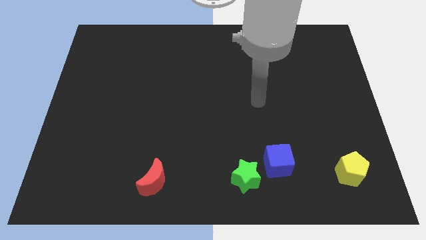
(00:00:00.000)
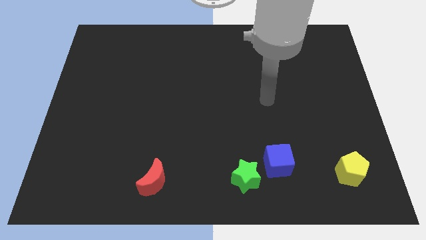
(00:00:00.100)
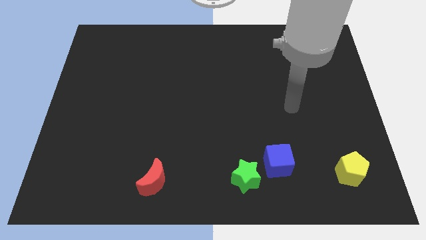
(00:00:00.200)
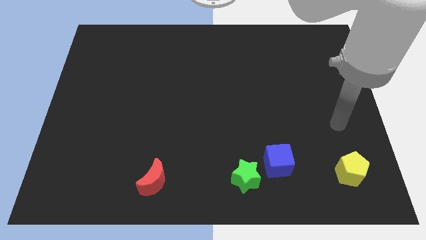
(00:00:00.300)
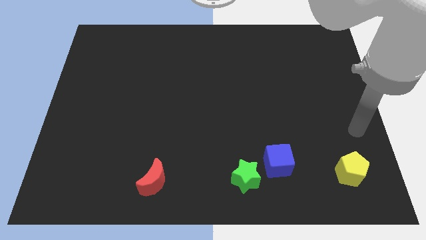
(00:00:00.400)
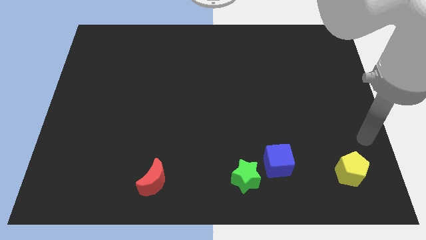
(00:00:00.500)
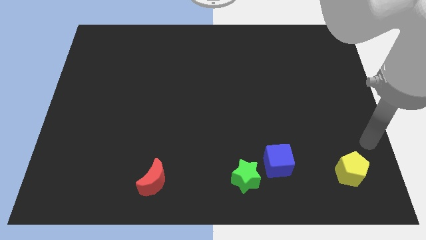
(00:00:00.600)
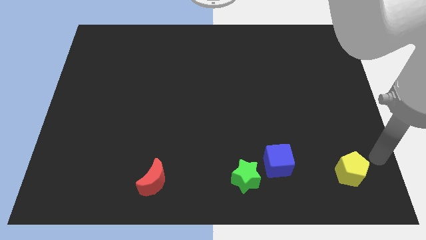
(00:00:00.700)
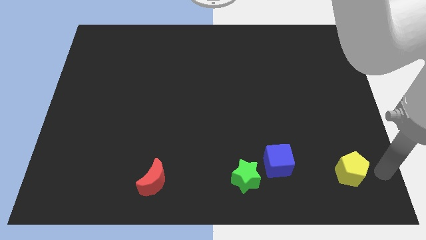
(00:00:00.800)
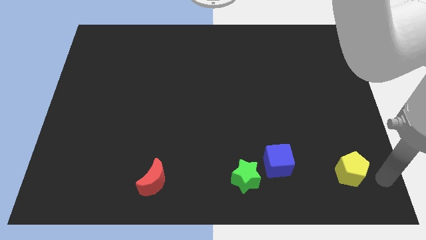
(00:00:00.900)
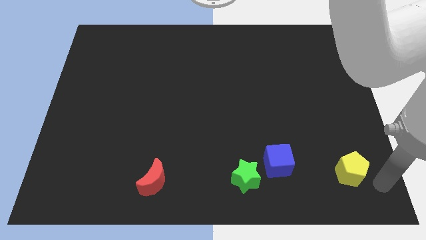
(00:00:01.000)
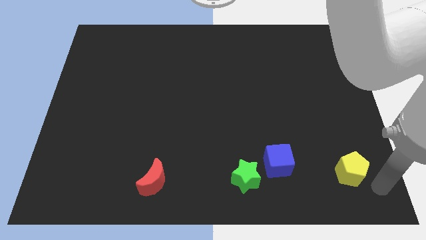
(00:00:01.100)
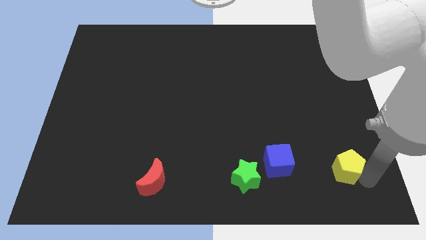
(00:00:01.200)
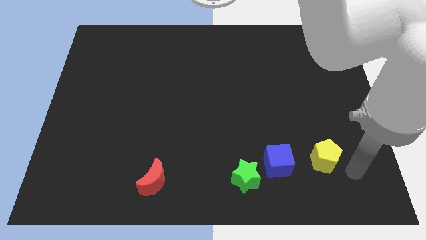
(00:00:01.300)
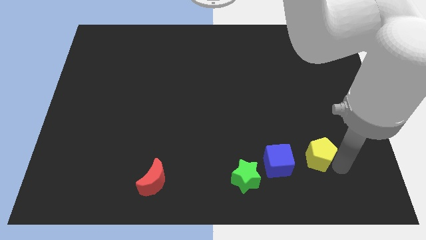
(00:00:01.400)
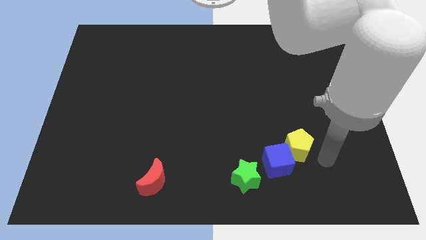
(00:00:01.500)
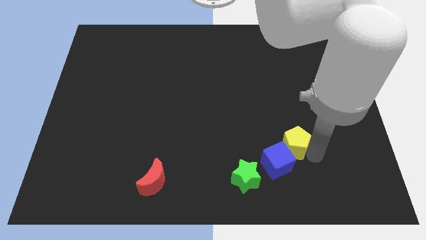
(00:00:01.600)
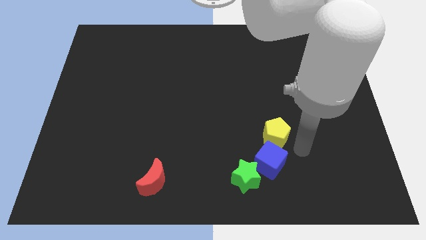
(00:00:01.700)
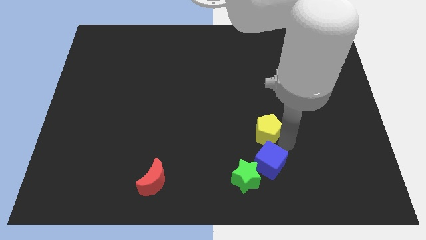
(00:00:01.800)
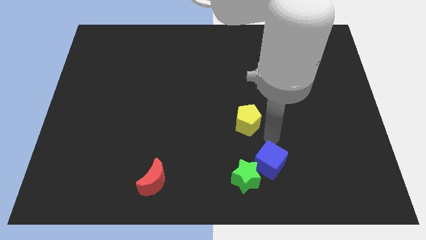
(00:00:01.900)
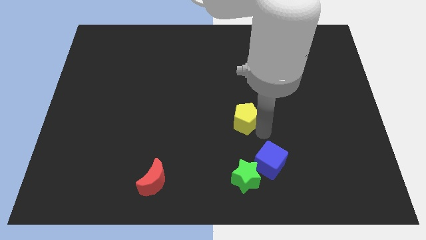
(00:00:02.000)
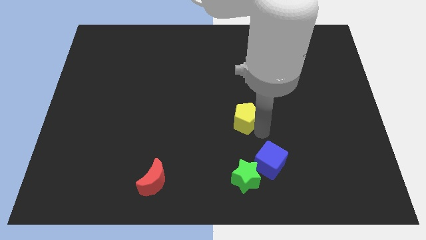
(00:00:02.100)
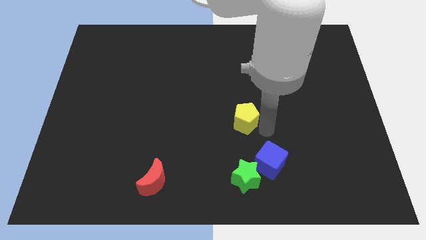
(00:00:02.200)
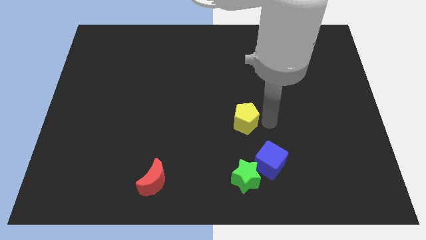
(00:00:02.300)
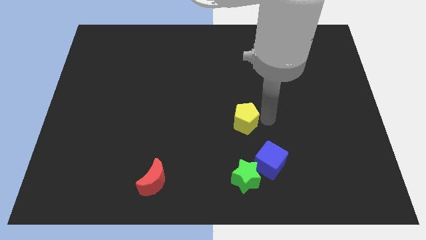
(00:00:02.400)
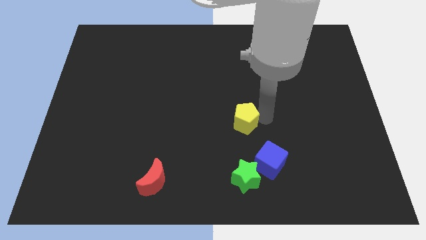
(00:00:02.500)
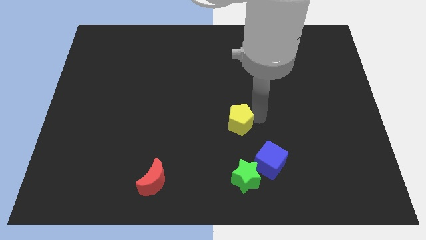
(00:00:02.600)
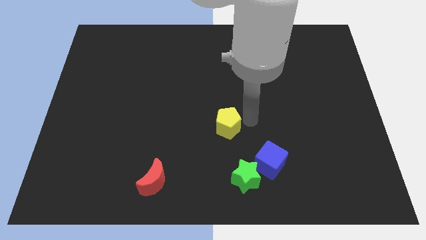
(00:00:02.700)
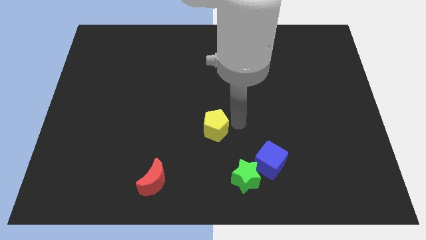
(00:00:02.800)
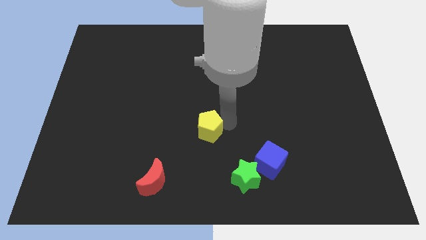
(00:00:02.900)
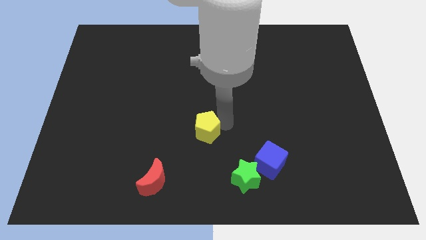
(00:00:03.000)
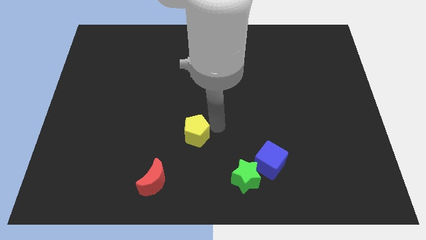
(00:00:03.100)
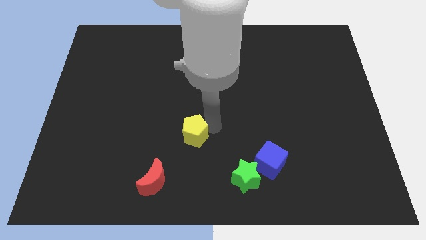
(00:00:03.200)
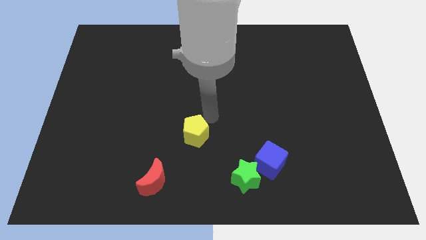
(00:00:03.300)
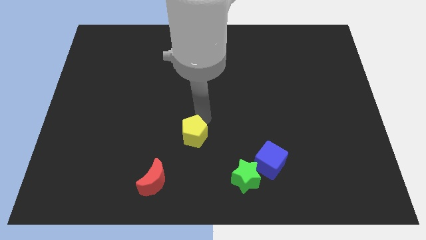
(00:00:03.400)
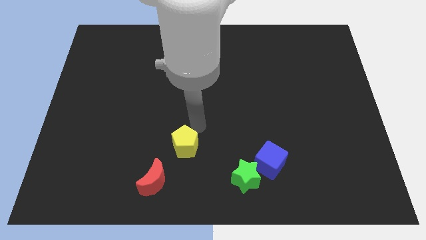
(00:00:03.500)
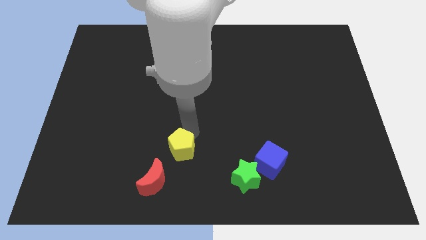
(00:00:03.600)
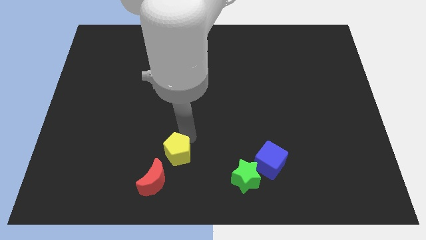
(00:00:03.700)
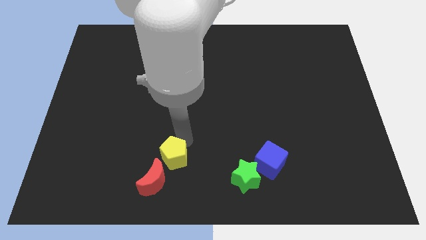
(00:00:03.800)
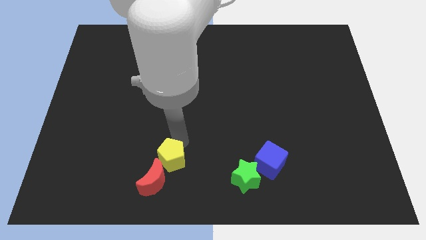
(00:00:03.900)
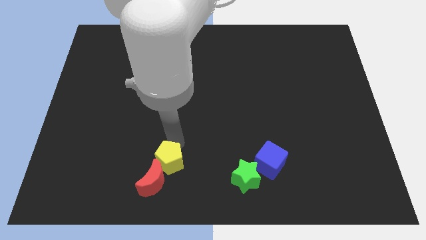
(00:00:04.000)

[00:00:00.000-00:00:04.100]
move the yellow block next to the red block

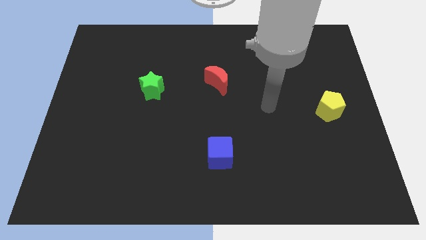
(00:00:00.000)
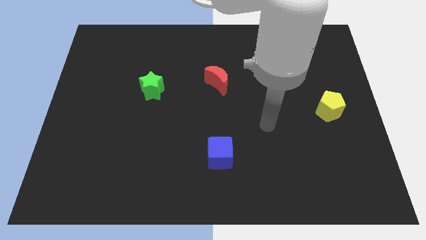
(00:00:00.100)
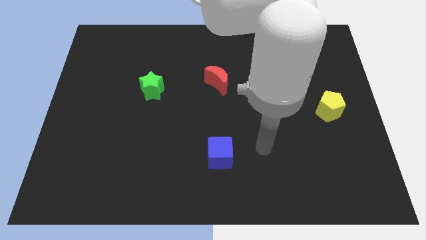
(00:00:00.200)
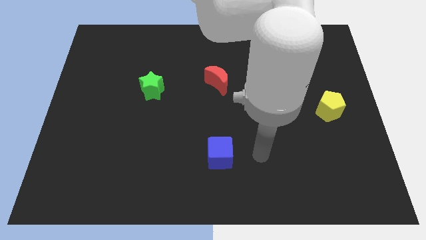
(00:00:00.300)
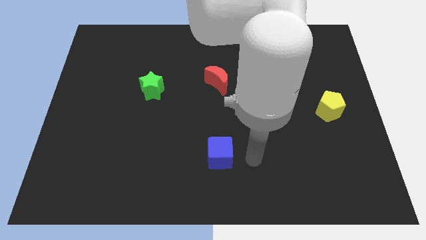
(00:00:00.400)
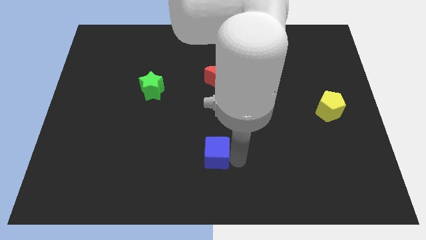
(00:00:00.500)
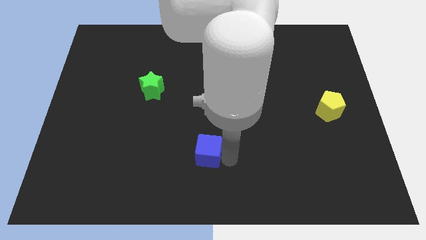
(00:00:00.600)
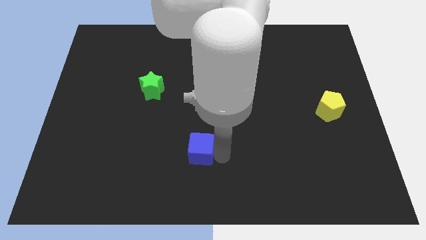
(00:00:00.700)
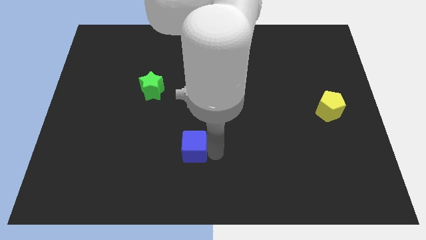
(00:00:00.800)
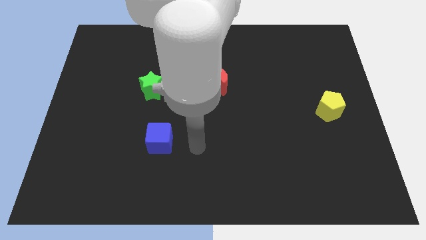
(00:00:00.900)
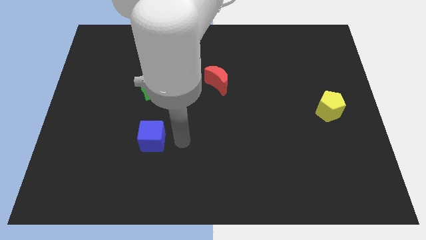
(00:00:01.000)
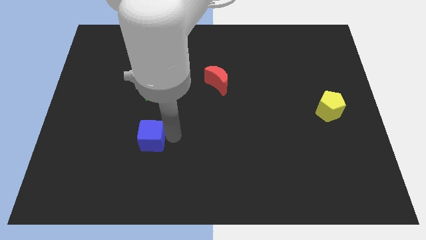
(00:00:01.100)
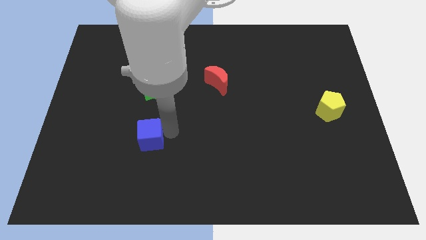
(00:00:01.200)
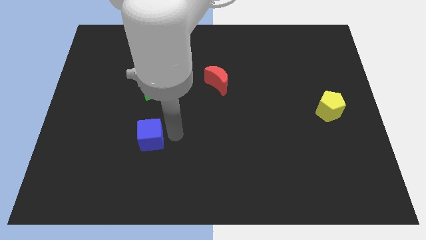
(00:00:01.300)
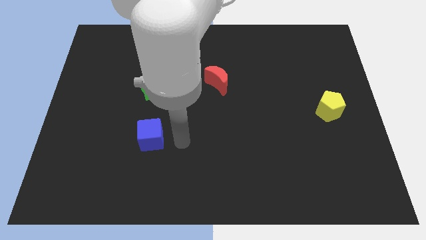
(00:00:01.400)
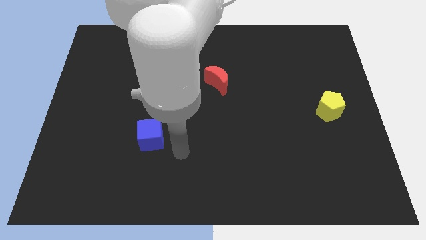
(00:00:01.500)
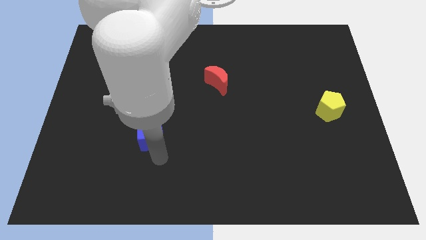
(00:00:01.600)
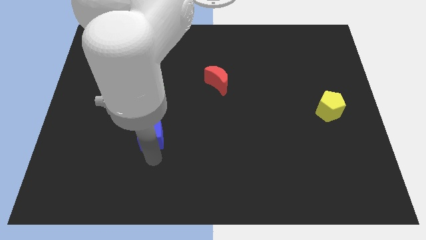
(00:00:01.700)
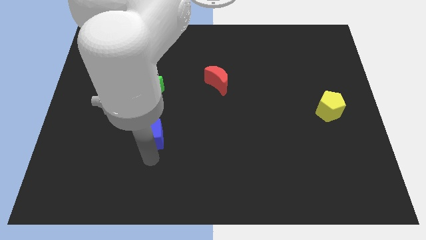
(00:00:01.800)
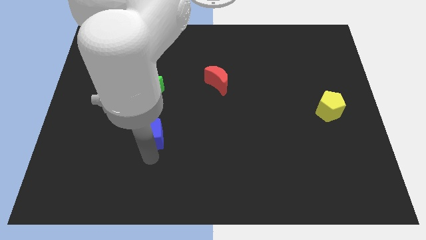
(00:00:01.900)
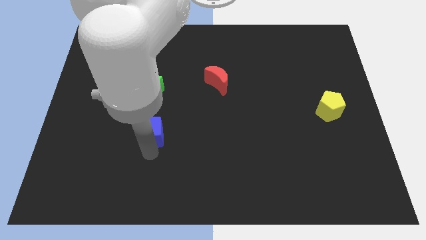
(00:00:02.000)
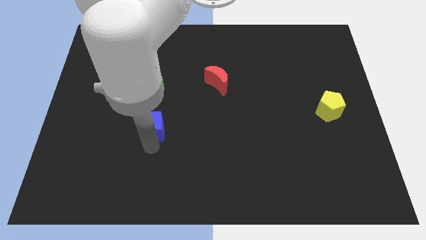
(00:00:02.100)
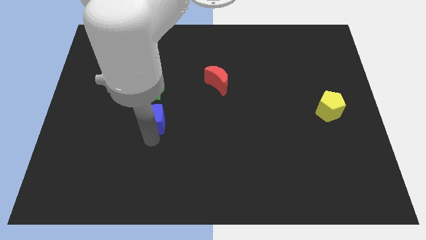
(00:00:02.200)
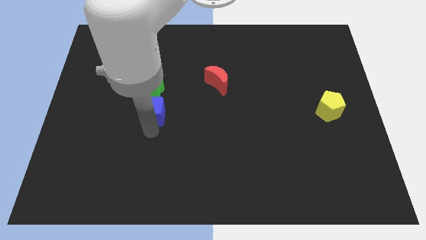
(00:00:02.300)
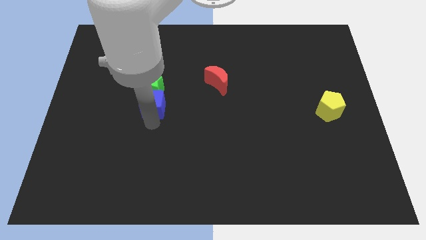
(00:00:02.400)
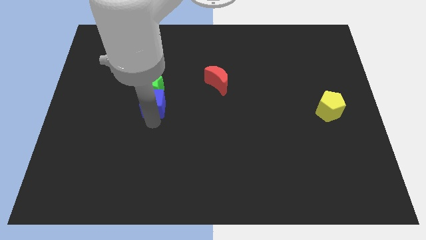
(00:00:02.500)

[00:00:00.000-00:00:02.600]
put the cube next to the star

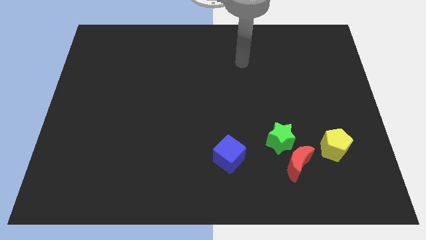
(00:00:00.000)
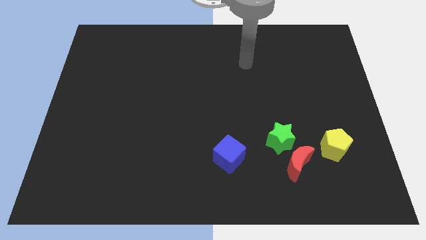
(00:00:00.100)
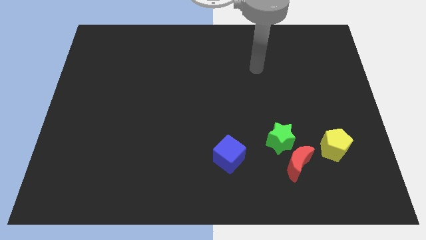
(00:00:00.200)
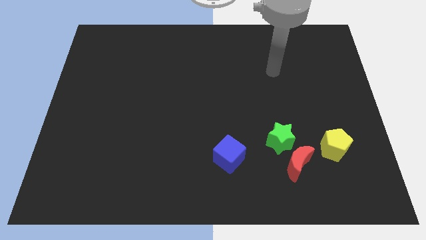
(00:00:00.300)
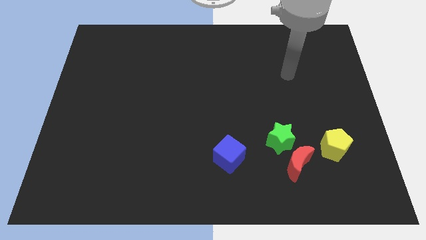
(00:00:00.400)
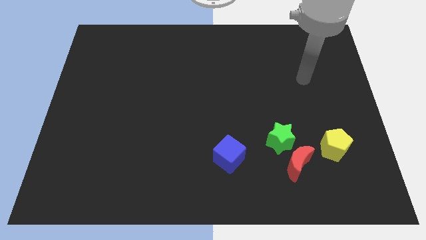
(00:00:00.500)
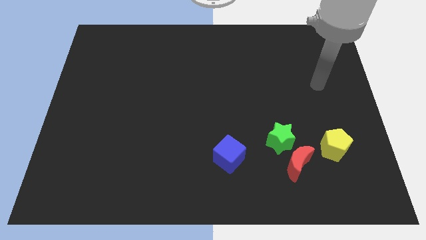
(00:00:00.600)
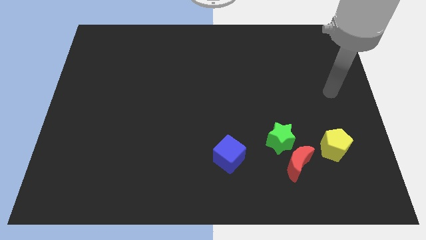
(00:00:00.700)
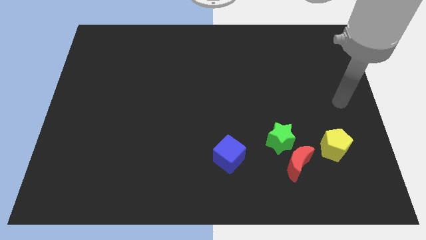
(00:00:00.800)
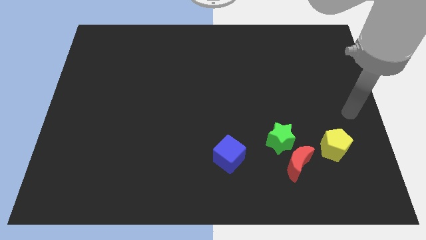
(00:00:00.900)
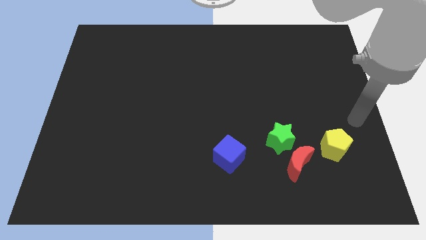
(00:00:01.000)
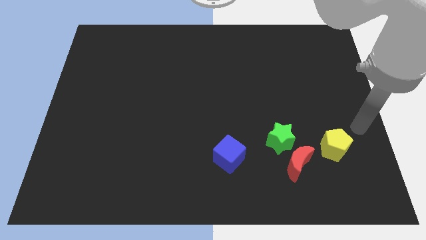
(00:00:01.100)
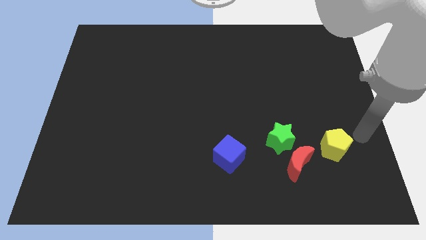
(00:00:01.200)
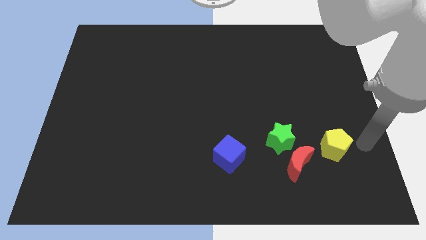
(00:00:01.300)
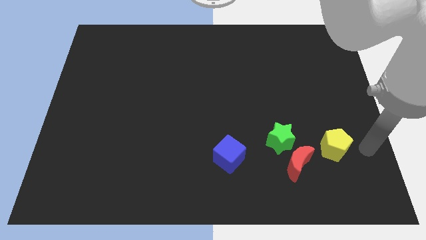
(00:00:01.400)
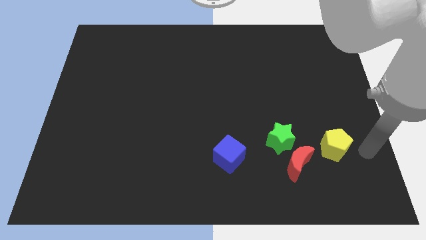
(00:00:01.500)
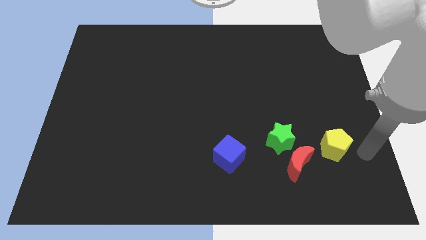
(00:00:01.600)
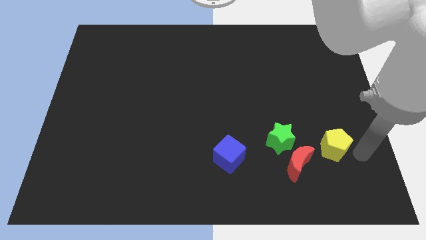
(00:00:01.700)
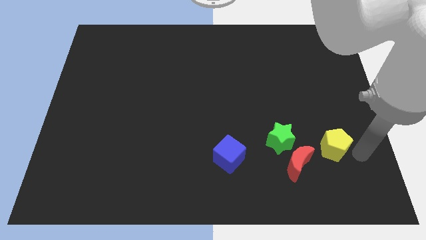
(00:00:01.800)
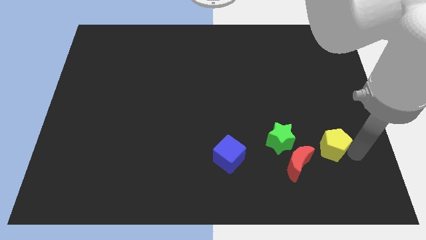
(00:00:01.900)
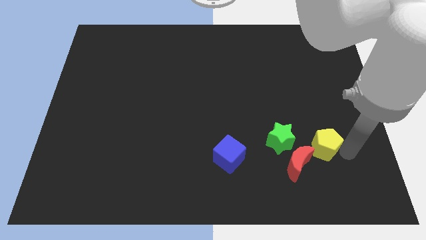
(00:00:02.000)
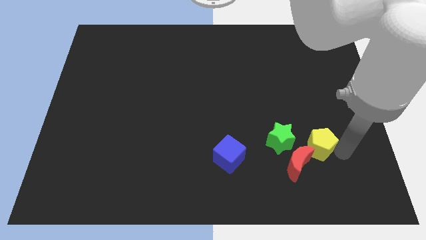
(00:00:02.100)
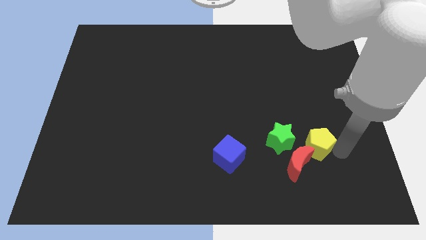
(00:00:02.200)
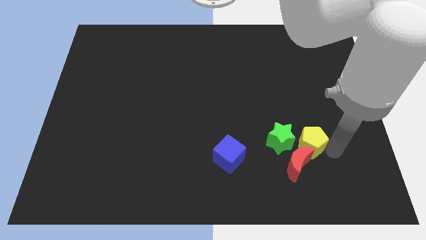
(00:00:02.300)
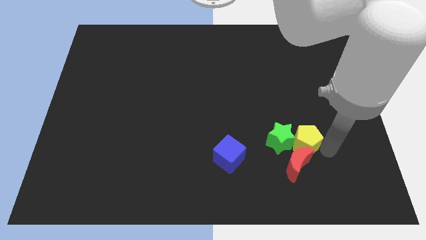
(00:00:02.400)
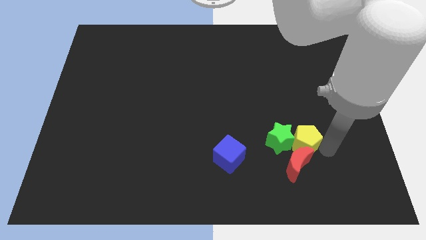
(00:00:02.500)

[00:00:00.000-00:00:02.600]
push the pentagon close to the star
